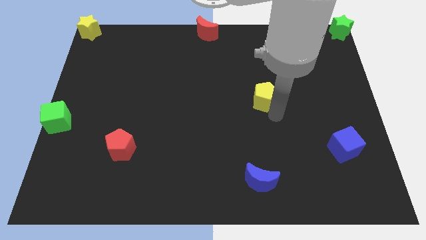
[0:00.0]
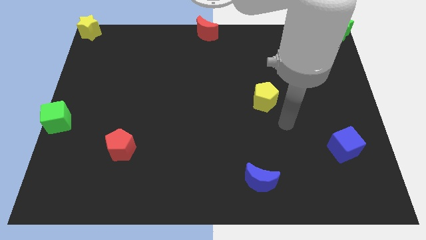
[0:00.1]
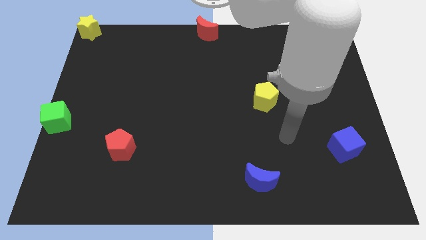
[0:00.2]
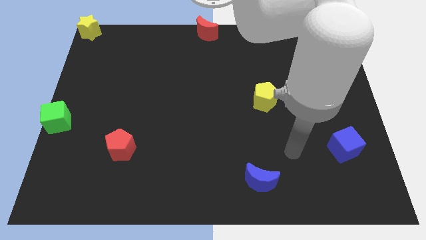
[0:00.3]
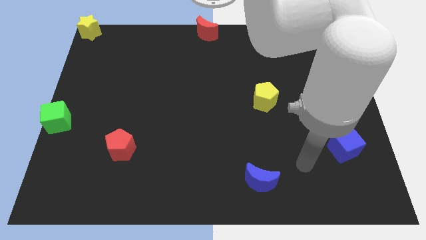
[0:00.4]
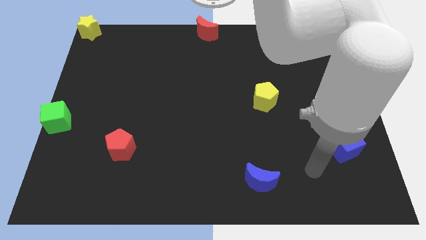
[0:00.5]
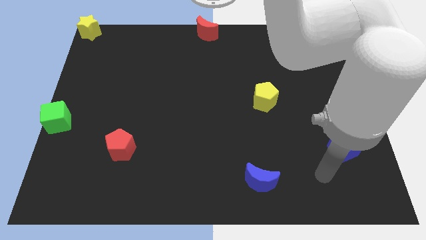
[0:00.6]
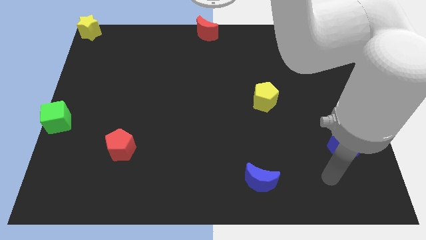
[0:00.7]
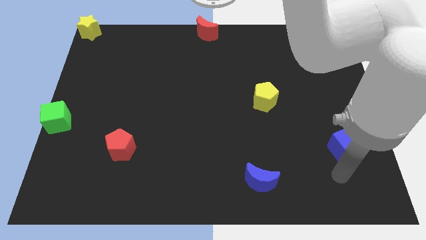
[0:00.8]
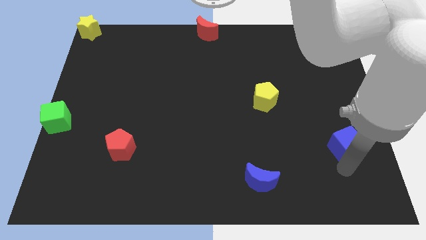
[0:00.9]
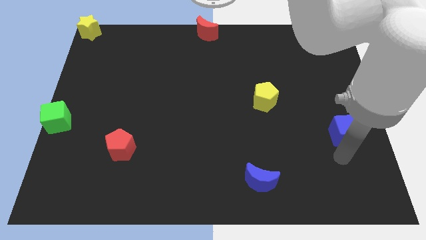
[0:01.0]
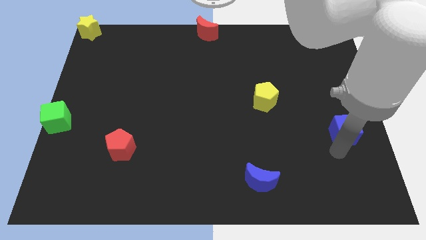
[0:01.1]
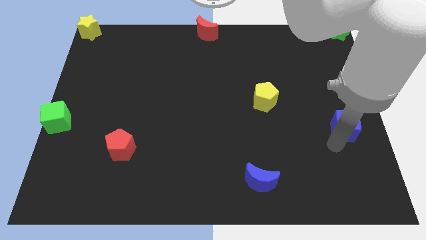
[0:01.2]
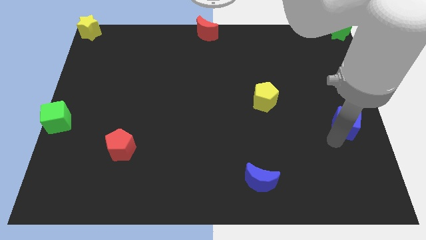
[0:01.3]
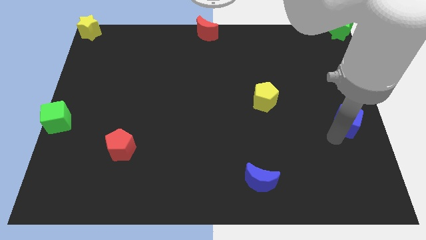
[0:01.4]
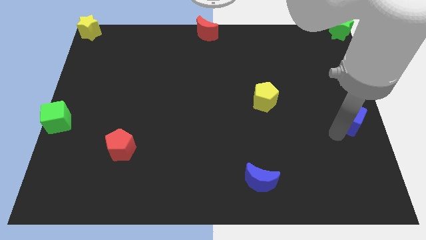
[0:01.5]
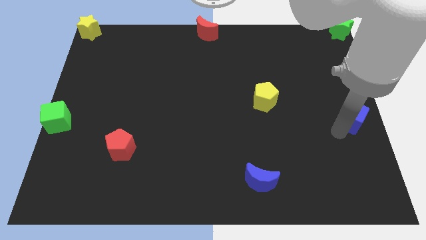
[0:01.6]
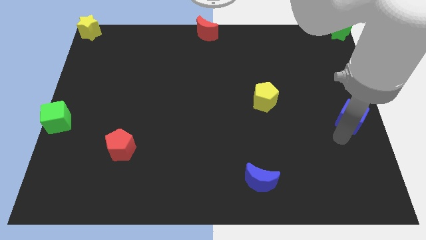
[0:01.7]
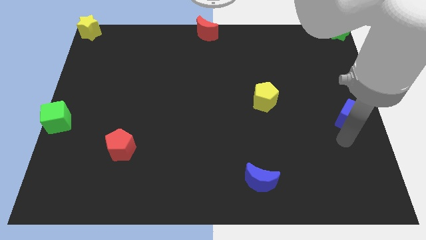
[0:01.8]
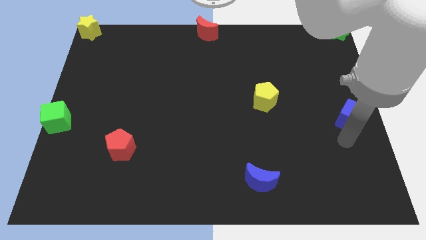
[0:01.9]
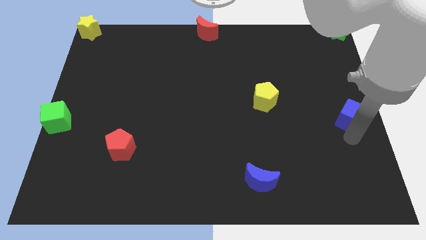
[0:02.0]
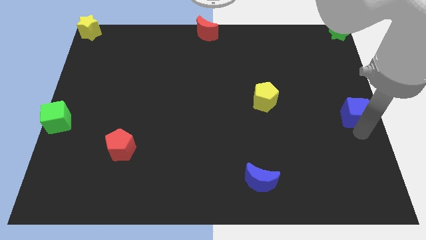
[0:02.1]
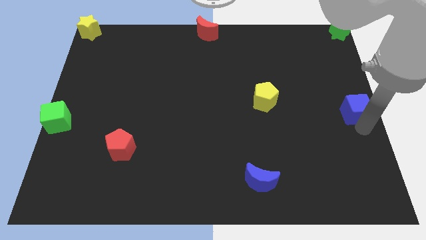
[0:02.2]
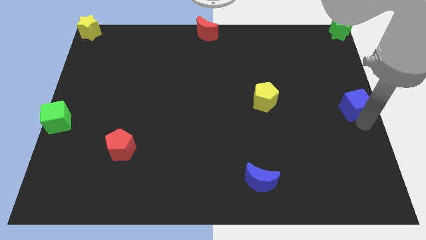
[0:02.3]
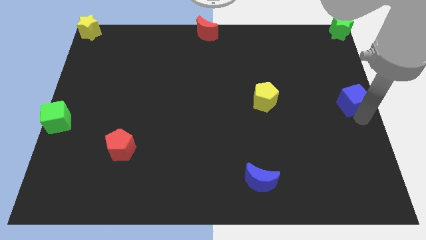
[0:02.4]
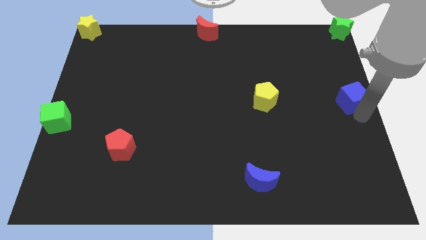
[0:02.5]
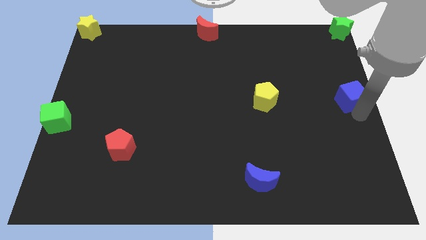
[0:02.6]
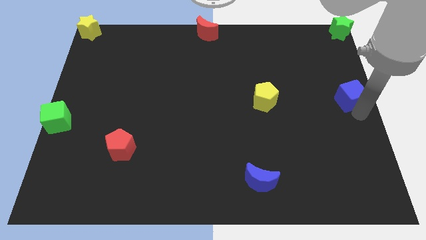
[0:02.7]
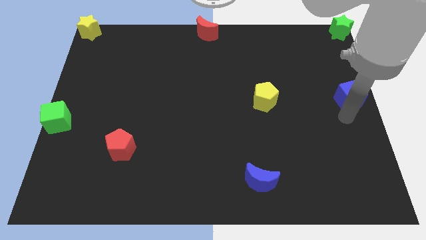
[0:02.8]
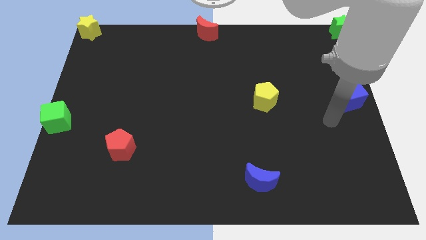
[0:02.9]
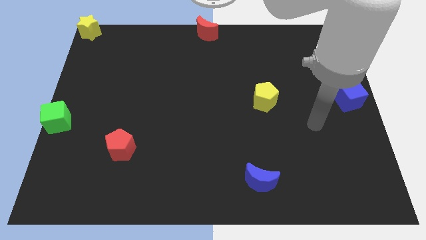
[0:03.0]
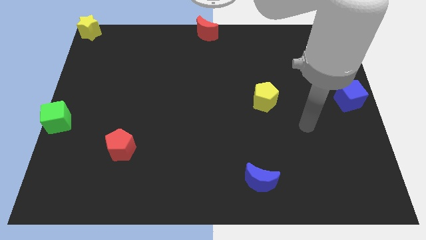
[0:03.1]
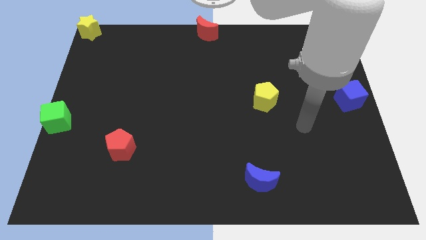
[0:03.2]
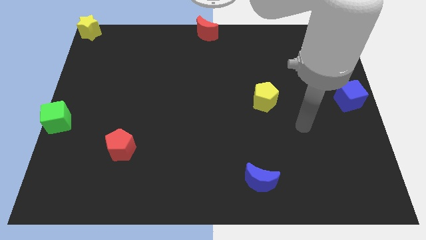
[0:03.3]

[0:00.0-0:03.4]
push the blue cube horizontally at the right side of the yellow pentagon

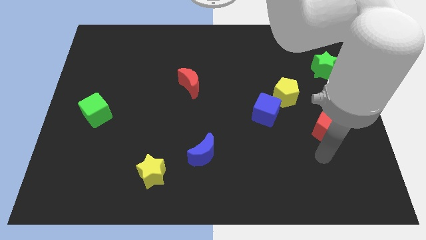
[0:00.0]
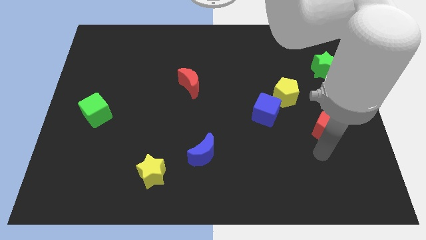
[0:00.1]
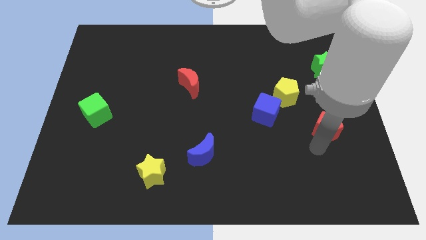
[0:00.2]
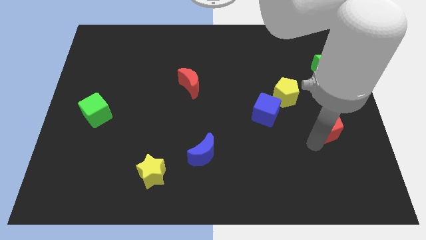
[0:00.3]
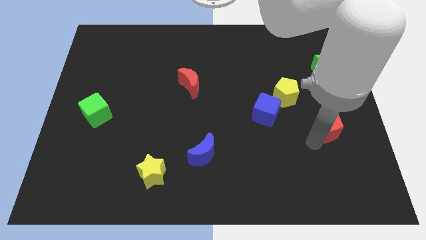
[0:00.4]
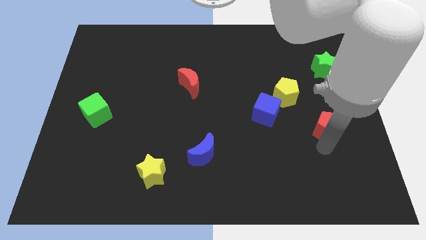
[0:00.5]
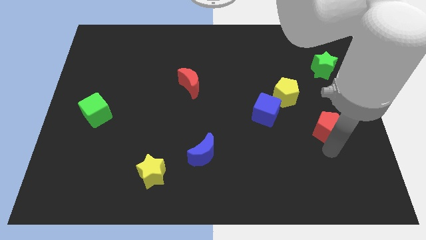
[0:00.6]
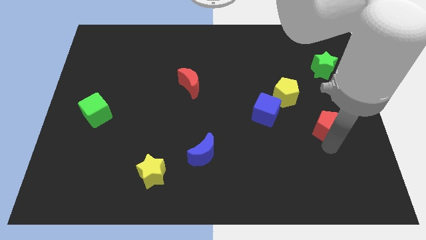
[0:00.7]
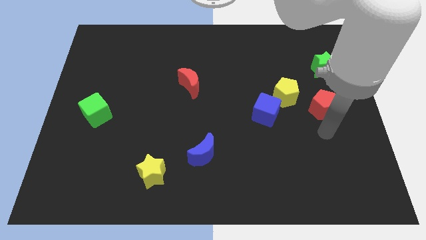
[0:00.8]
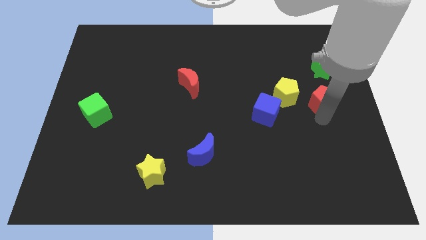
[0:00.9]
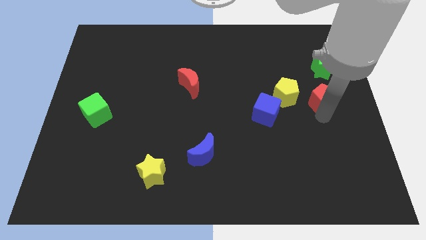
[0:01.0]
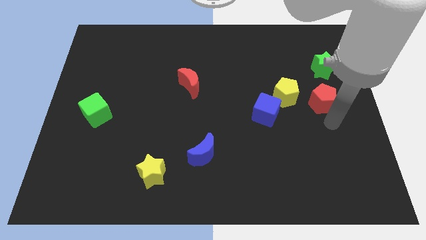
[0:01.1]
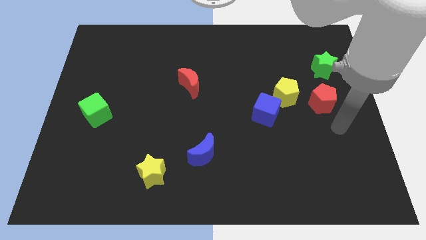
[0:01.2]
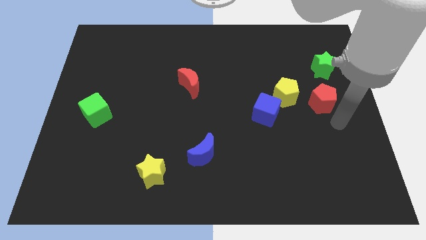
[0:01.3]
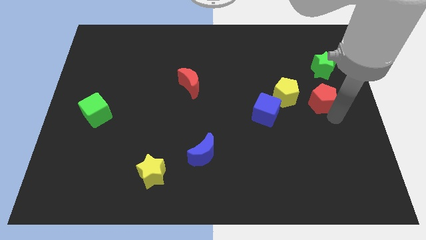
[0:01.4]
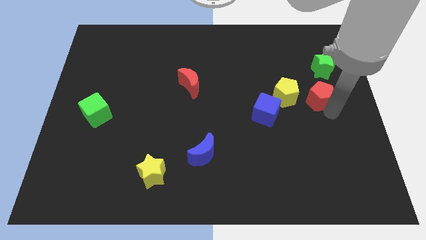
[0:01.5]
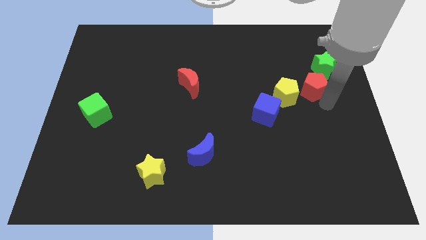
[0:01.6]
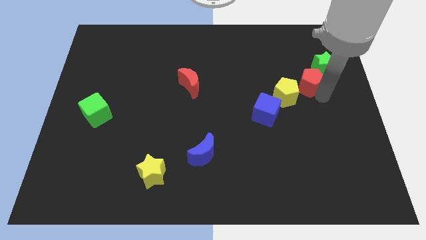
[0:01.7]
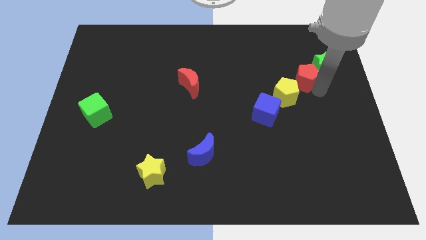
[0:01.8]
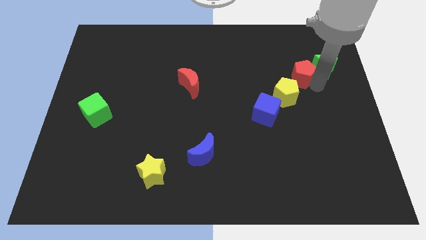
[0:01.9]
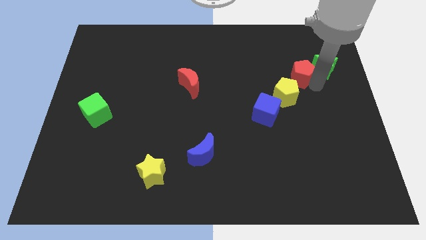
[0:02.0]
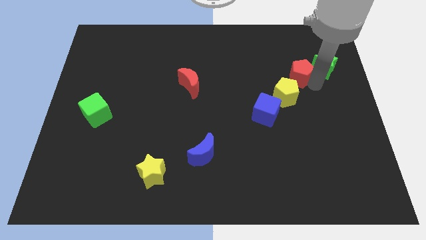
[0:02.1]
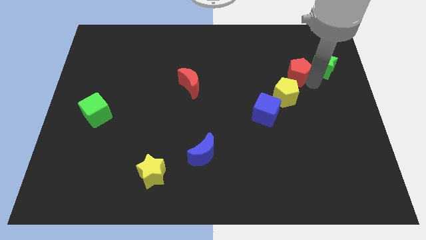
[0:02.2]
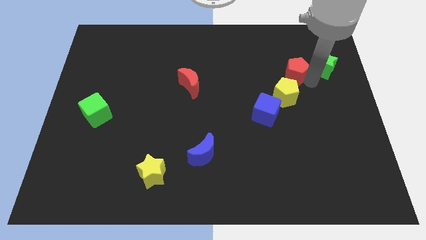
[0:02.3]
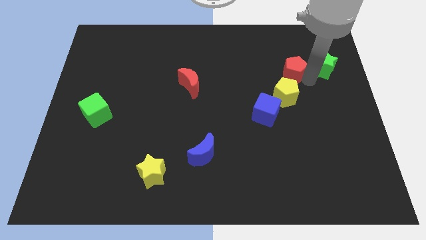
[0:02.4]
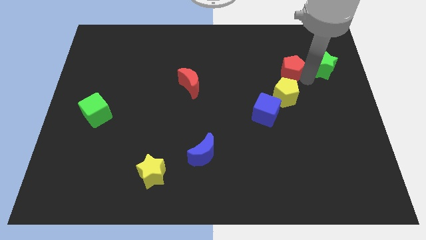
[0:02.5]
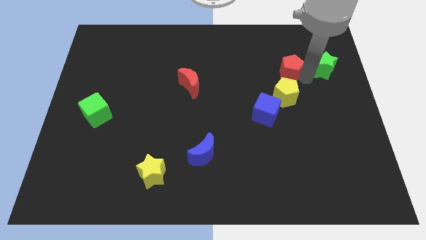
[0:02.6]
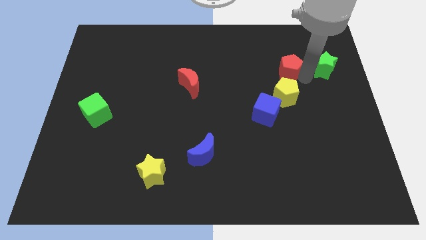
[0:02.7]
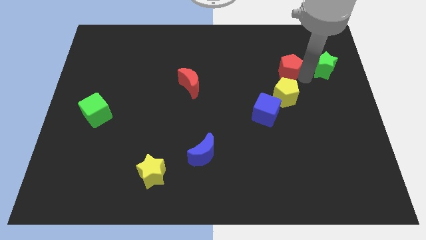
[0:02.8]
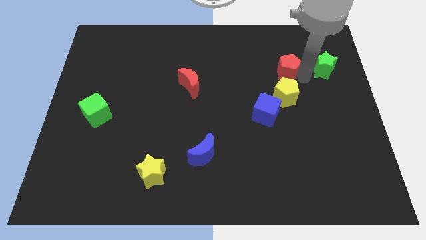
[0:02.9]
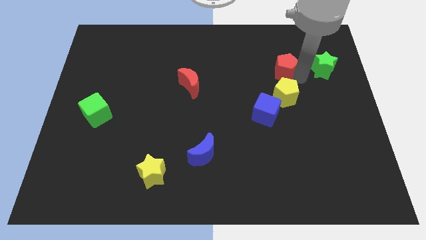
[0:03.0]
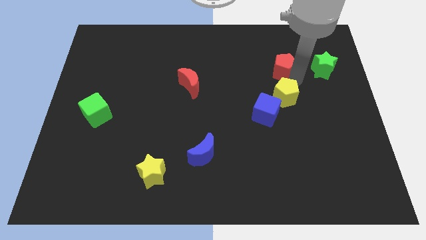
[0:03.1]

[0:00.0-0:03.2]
place the red pentagon to the top right of the yellow pentagon

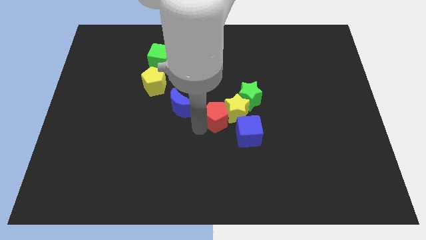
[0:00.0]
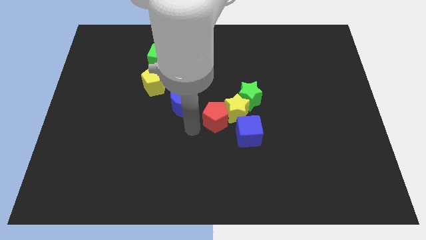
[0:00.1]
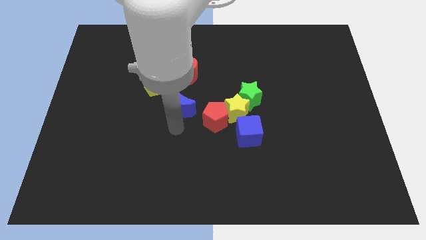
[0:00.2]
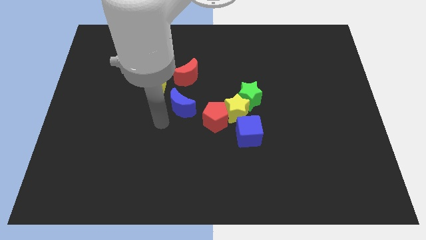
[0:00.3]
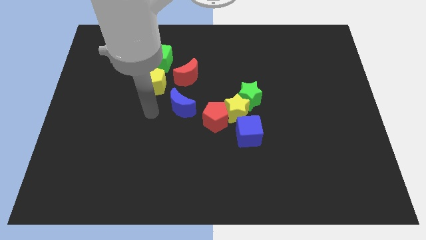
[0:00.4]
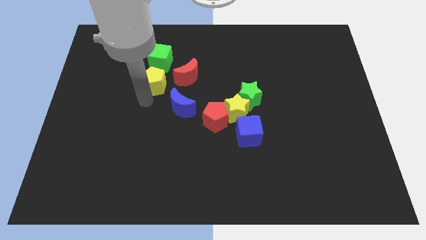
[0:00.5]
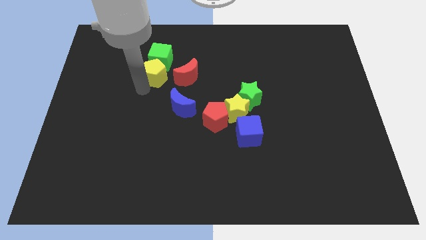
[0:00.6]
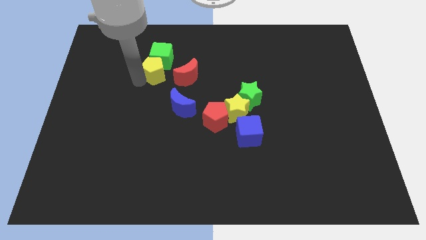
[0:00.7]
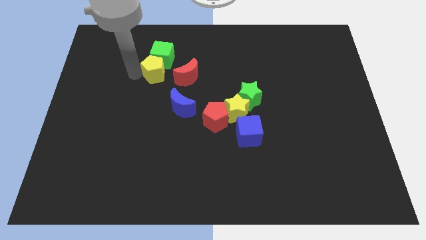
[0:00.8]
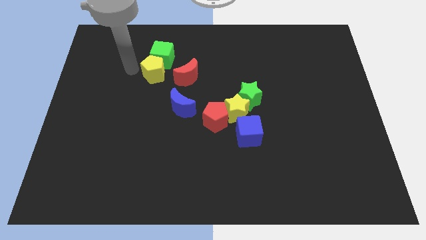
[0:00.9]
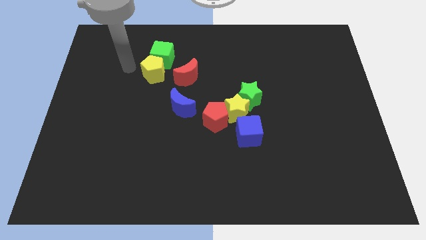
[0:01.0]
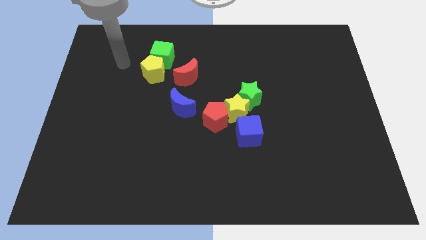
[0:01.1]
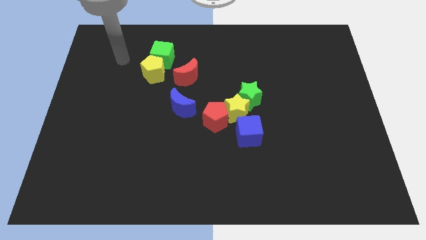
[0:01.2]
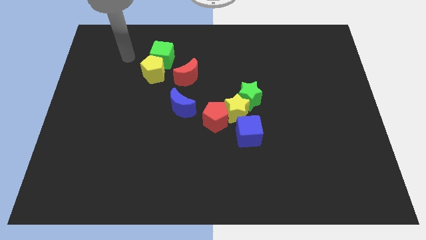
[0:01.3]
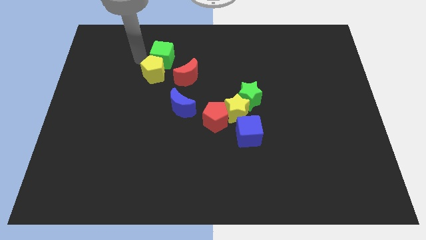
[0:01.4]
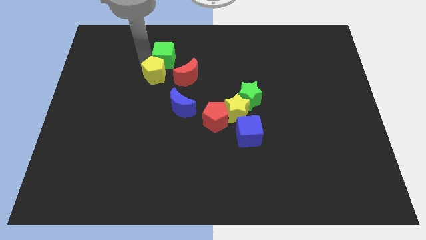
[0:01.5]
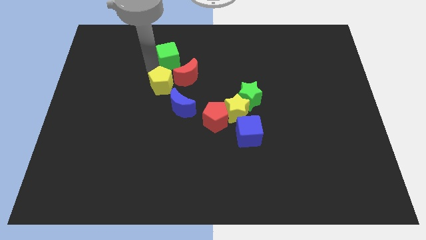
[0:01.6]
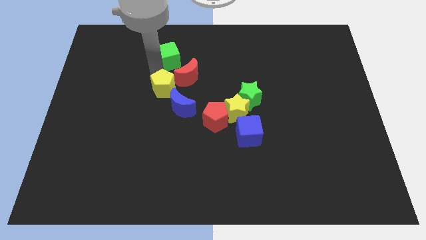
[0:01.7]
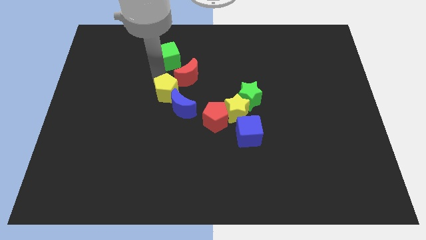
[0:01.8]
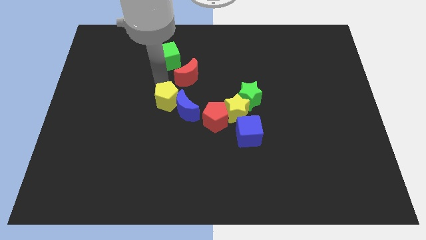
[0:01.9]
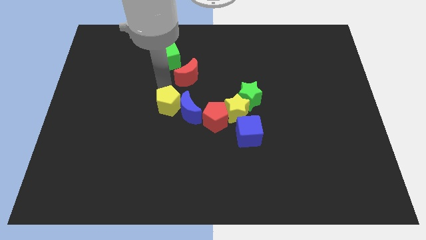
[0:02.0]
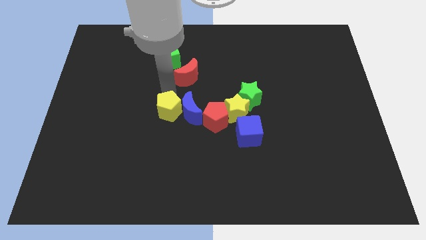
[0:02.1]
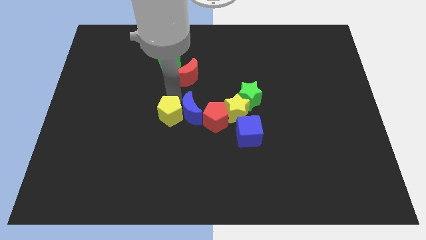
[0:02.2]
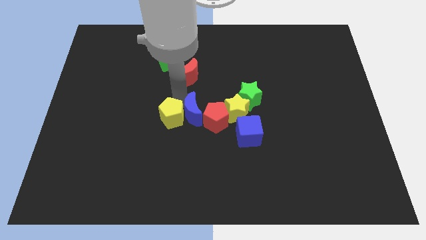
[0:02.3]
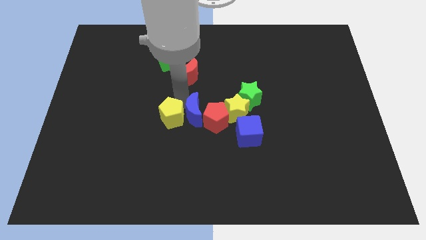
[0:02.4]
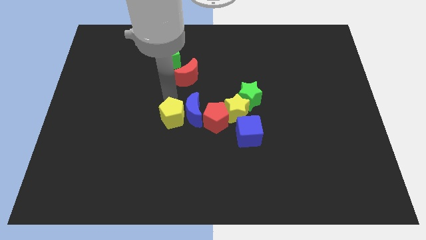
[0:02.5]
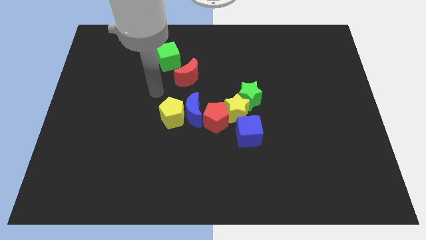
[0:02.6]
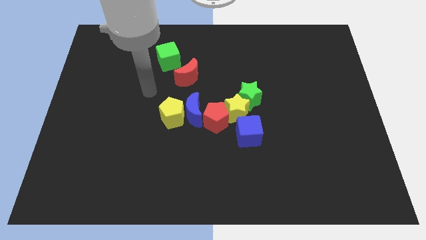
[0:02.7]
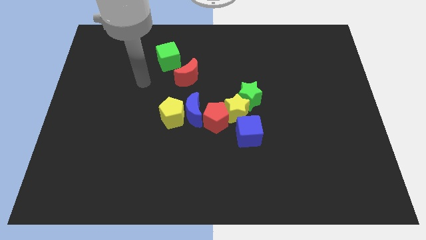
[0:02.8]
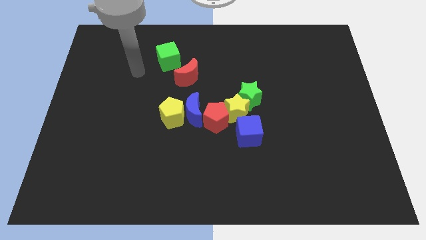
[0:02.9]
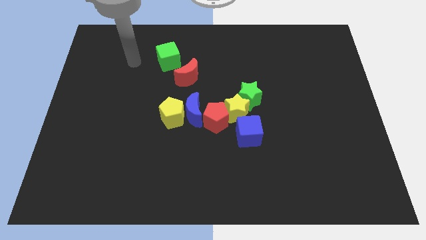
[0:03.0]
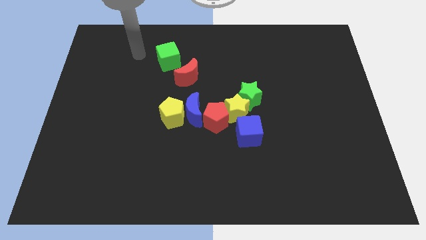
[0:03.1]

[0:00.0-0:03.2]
push the yellow pentagon to the left of the blue moon
